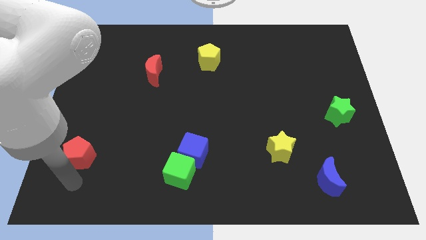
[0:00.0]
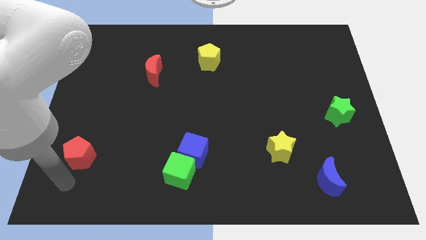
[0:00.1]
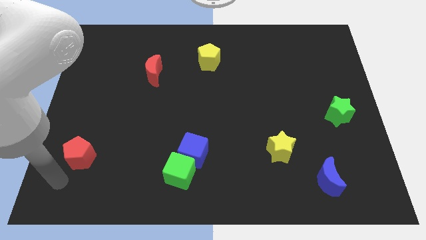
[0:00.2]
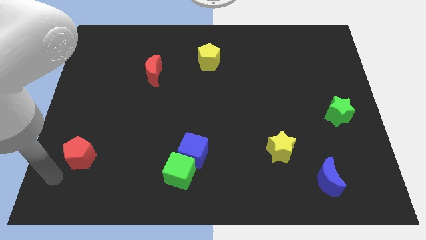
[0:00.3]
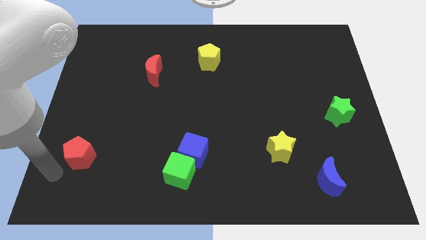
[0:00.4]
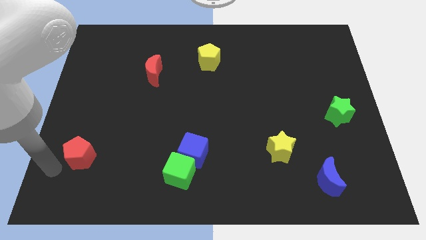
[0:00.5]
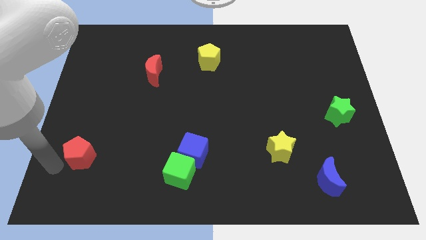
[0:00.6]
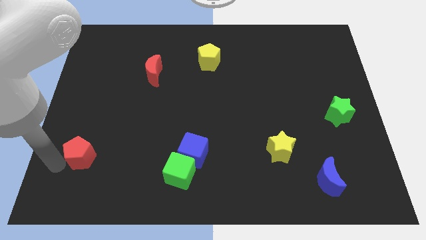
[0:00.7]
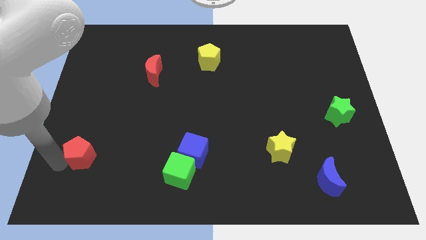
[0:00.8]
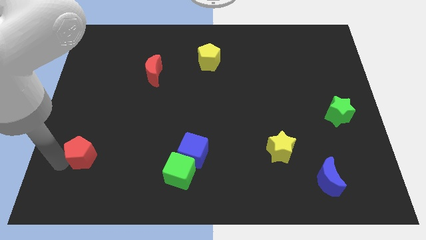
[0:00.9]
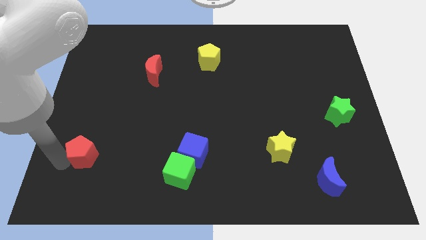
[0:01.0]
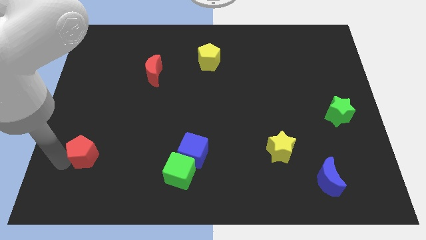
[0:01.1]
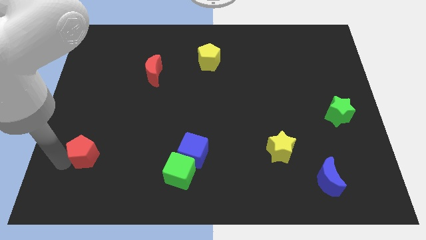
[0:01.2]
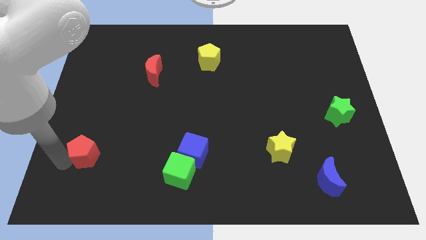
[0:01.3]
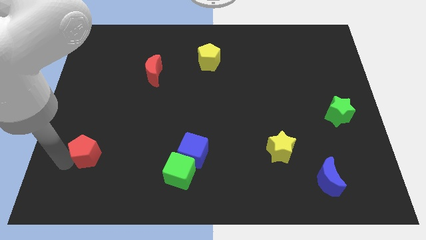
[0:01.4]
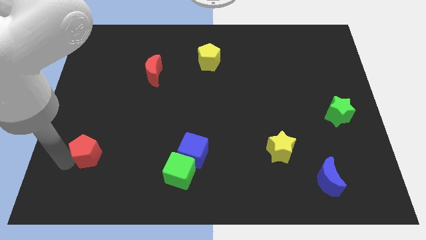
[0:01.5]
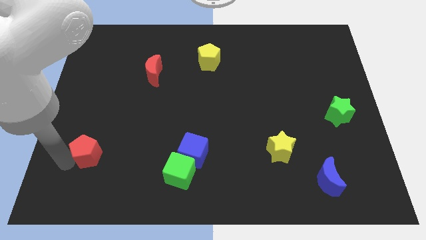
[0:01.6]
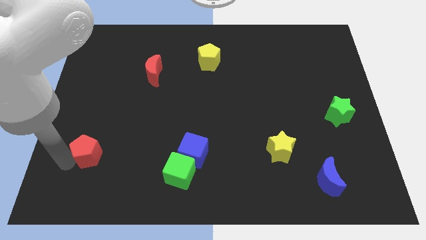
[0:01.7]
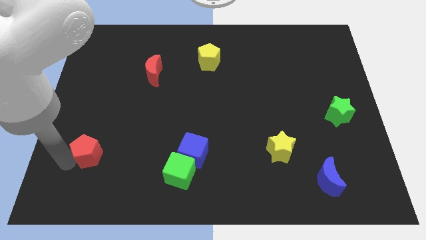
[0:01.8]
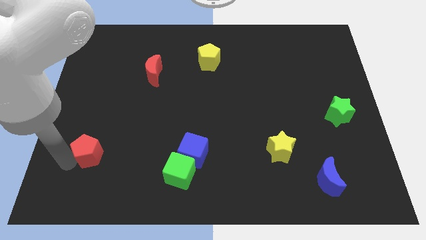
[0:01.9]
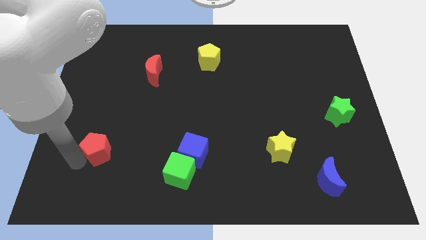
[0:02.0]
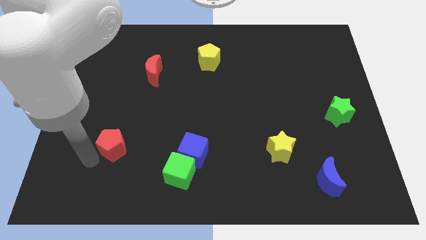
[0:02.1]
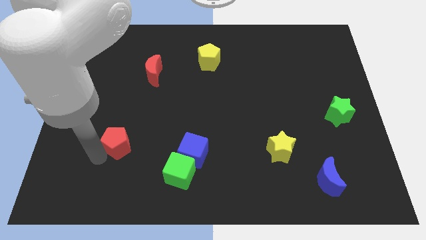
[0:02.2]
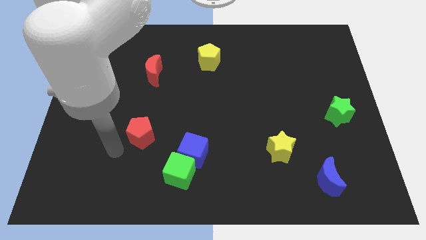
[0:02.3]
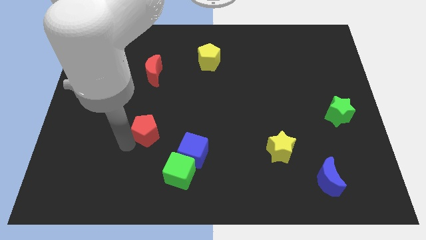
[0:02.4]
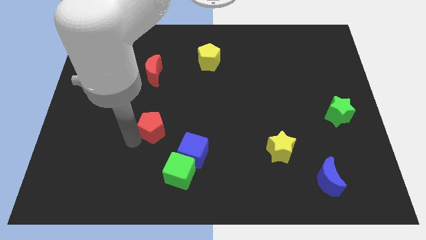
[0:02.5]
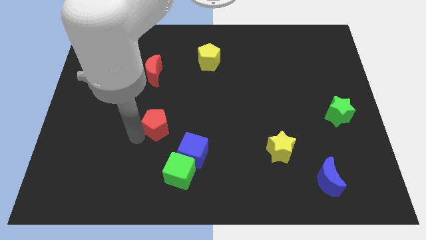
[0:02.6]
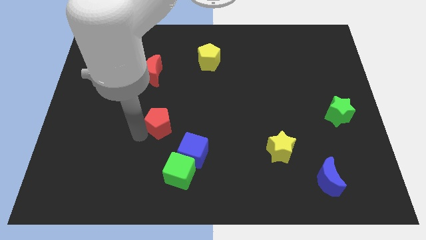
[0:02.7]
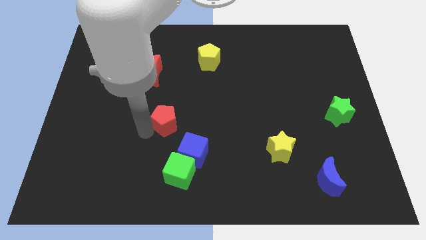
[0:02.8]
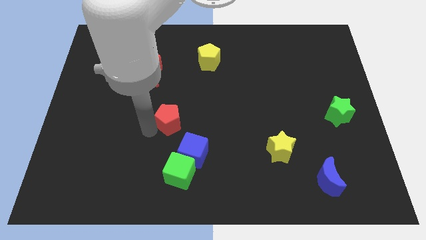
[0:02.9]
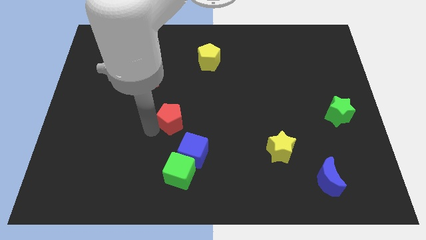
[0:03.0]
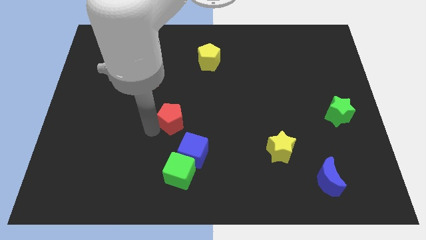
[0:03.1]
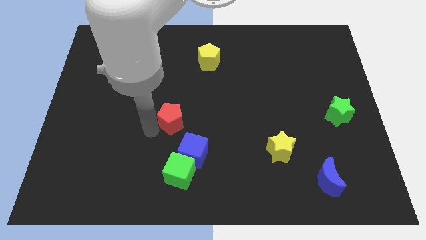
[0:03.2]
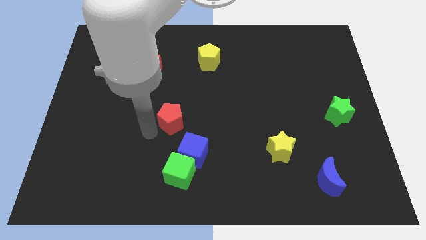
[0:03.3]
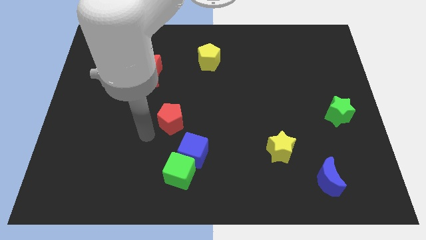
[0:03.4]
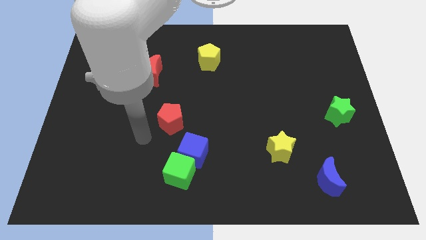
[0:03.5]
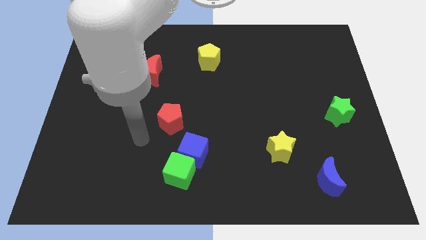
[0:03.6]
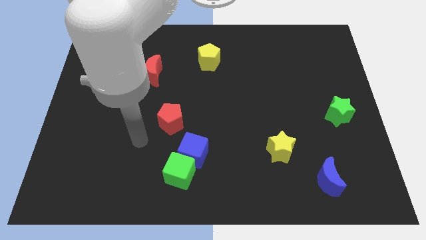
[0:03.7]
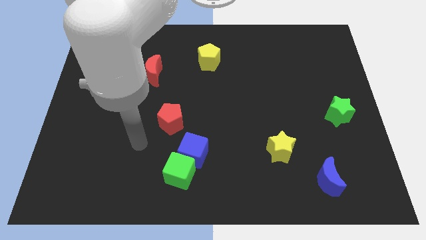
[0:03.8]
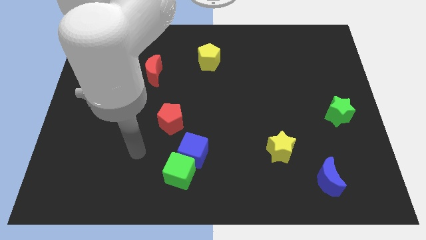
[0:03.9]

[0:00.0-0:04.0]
move the red pentagon diagonally to the top left of the blue cube

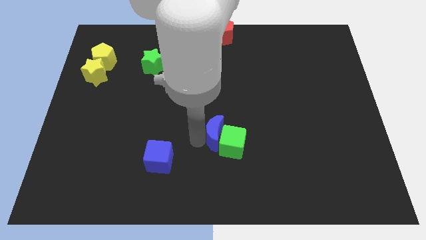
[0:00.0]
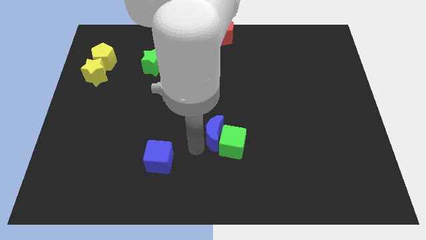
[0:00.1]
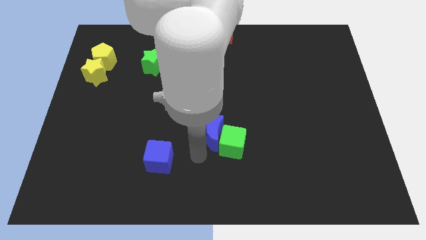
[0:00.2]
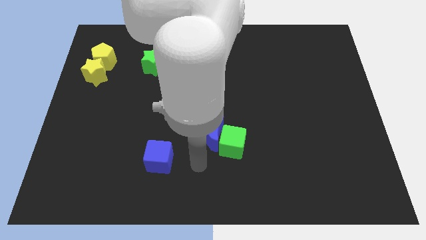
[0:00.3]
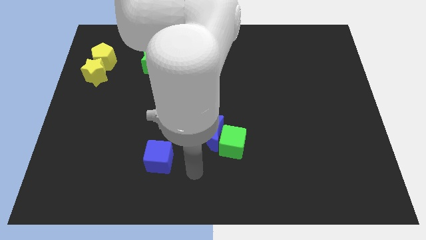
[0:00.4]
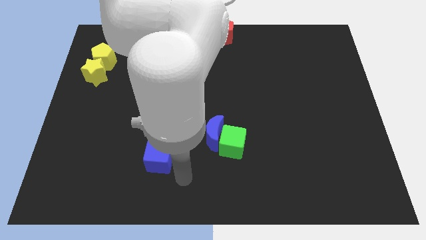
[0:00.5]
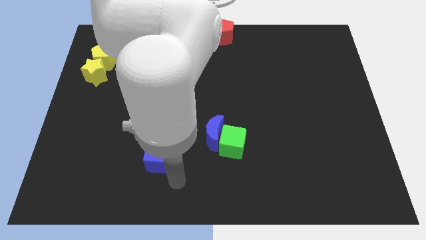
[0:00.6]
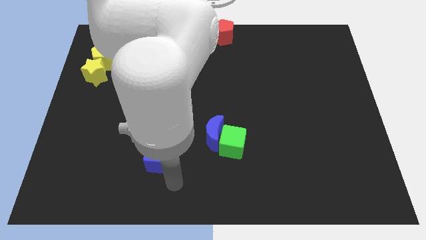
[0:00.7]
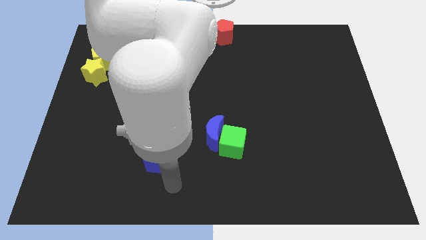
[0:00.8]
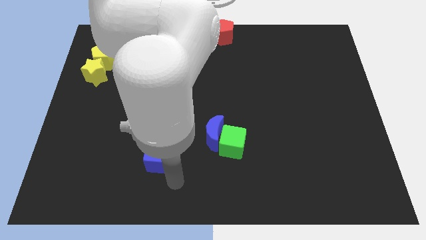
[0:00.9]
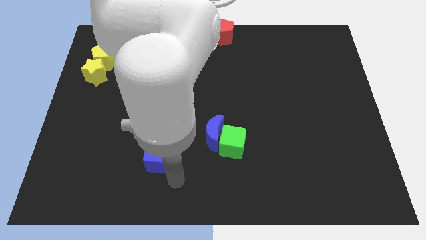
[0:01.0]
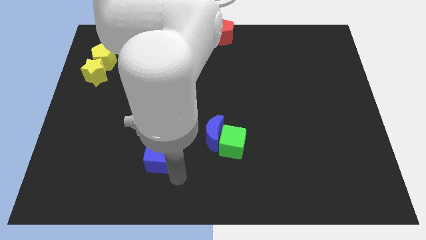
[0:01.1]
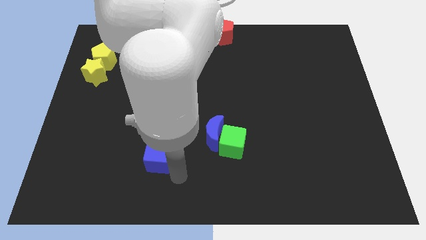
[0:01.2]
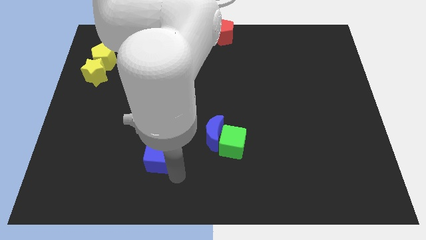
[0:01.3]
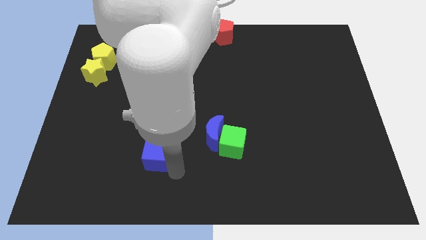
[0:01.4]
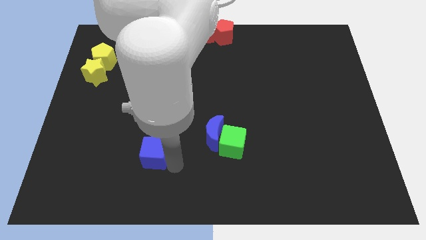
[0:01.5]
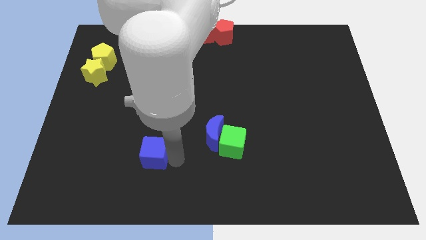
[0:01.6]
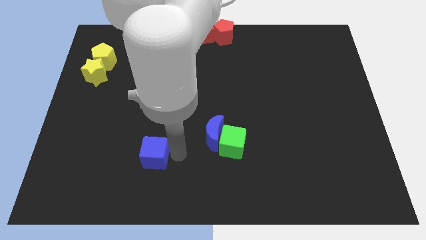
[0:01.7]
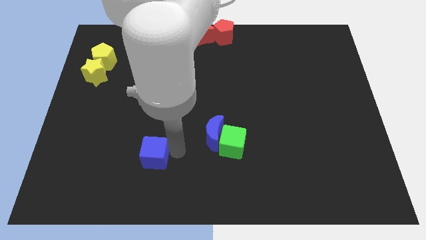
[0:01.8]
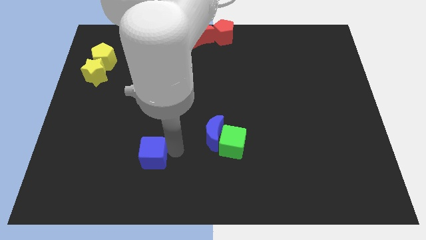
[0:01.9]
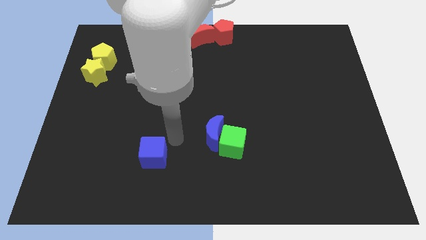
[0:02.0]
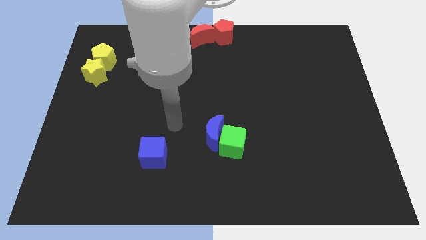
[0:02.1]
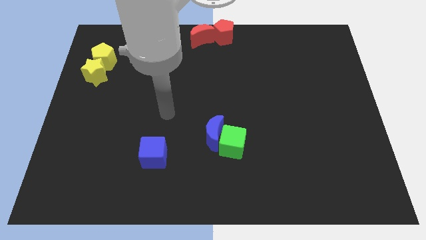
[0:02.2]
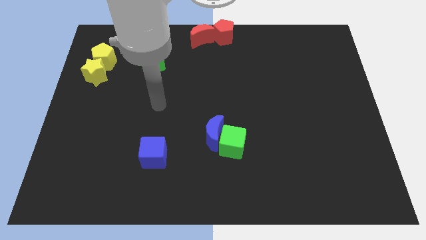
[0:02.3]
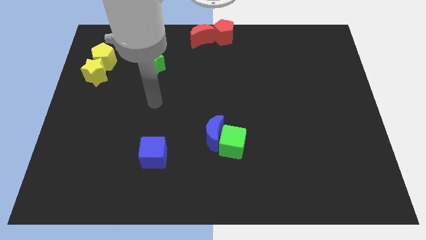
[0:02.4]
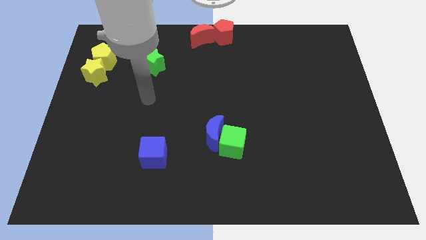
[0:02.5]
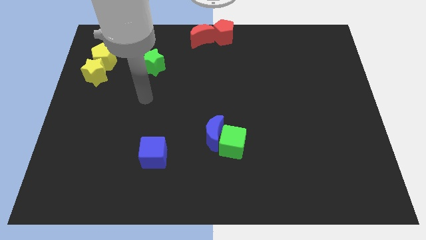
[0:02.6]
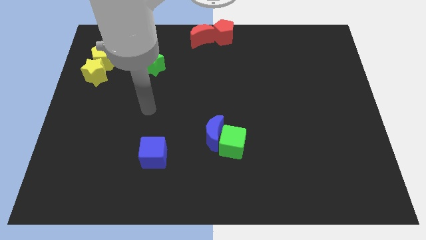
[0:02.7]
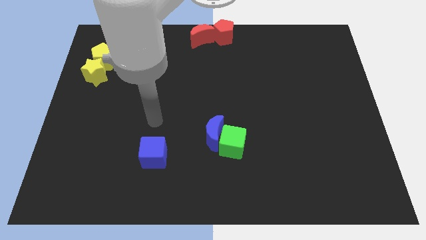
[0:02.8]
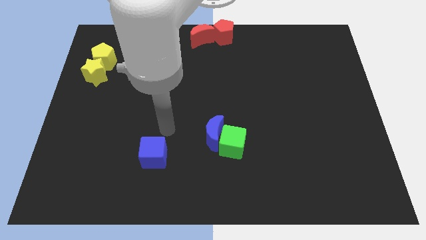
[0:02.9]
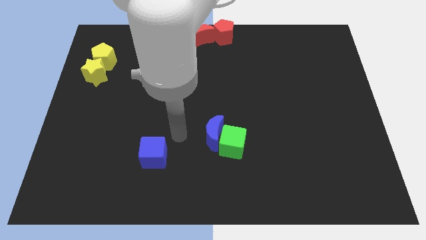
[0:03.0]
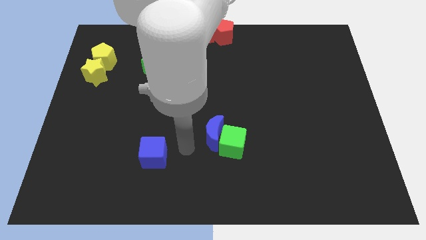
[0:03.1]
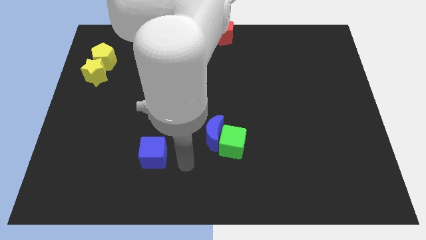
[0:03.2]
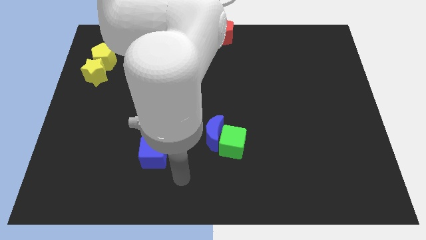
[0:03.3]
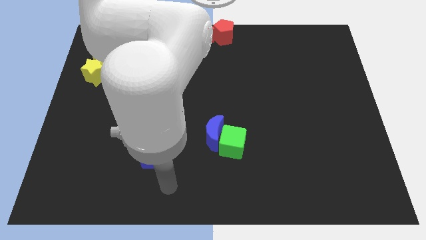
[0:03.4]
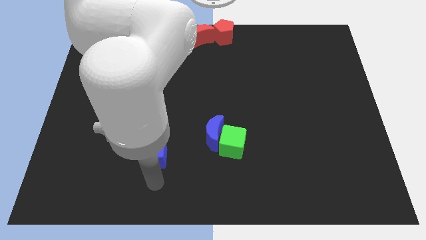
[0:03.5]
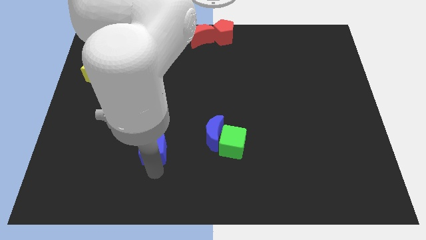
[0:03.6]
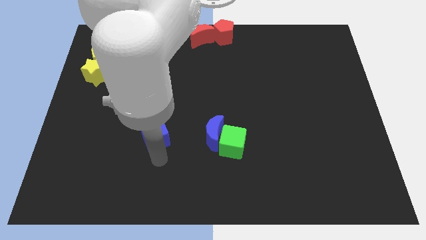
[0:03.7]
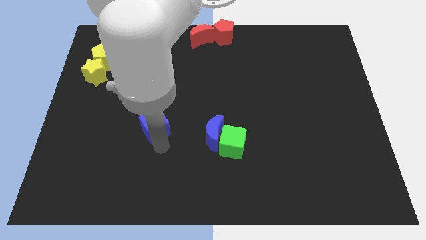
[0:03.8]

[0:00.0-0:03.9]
push the blue cube slightly upwards

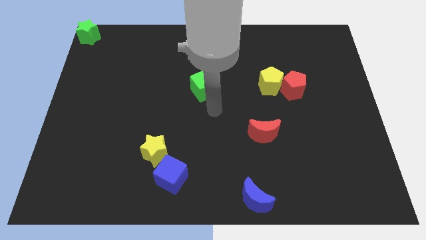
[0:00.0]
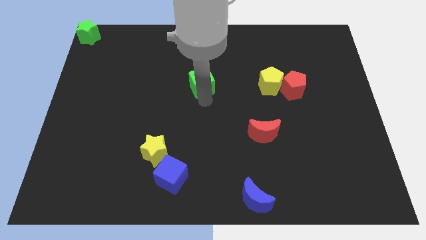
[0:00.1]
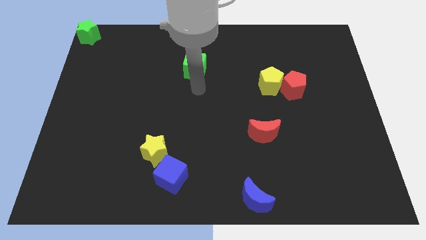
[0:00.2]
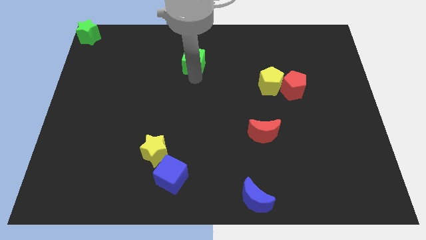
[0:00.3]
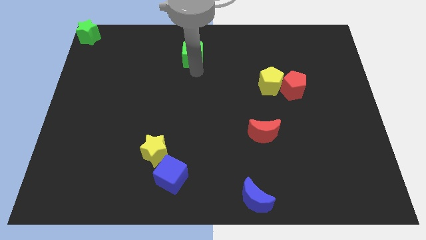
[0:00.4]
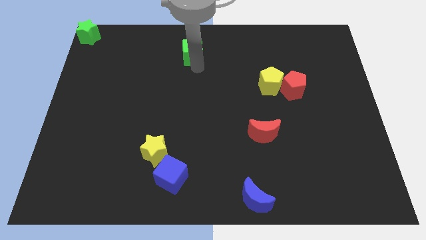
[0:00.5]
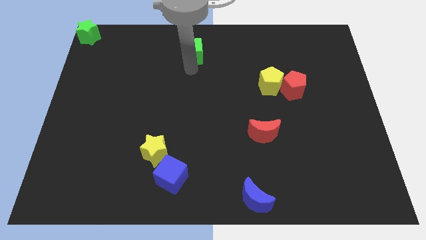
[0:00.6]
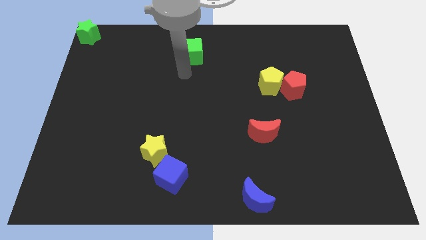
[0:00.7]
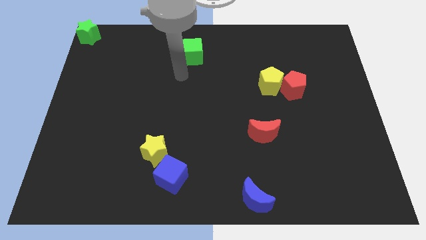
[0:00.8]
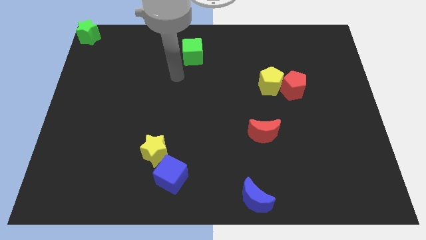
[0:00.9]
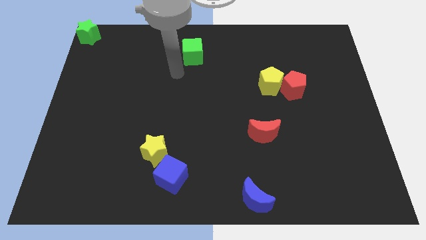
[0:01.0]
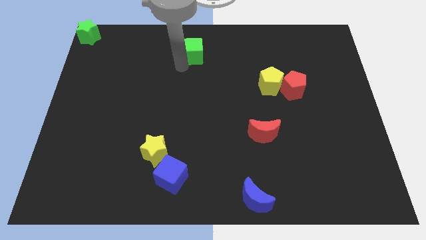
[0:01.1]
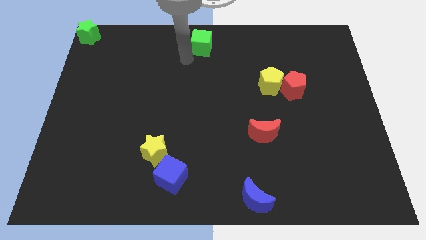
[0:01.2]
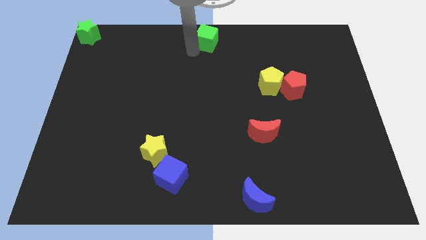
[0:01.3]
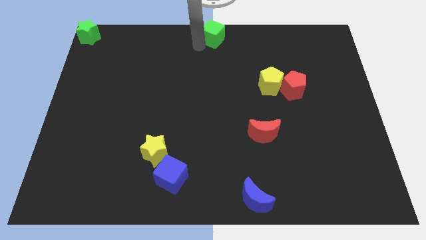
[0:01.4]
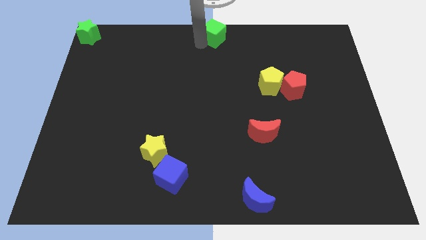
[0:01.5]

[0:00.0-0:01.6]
push the green cube to the top center of the table
